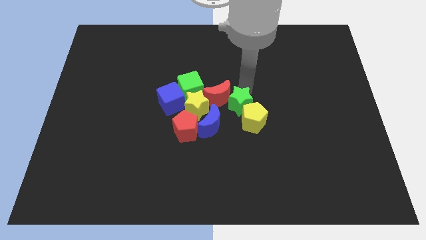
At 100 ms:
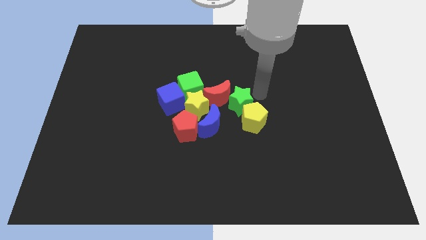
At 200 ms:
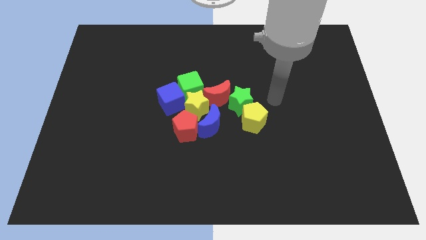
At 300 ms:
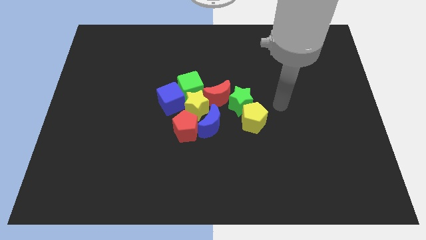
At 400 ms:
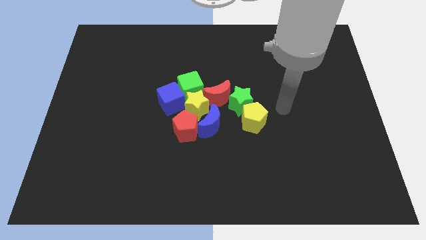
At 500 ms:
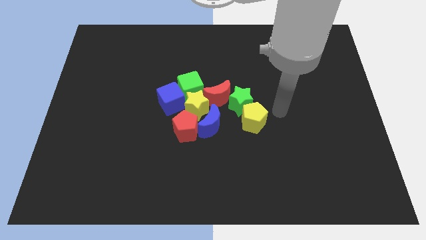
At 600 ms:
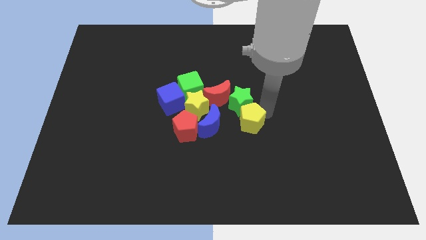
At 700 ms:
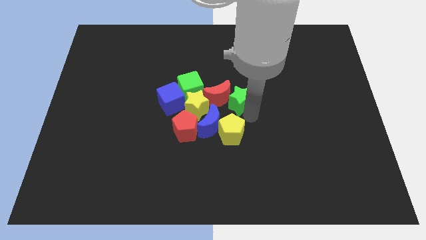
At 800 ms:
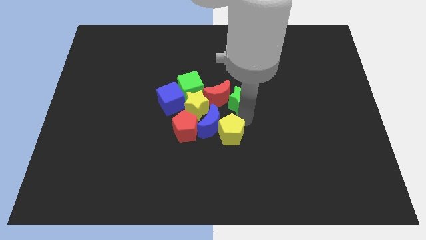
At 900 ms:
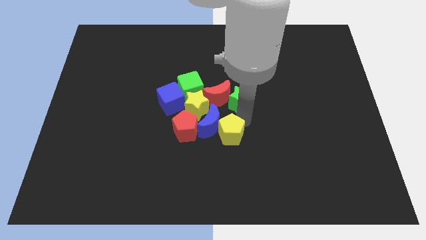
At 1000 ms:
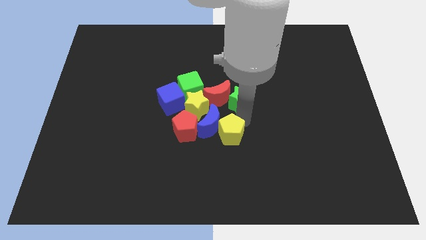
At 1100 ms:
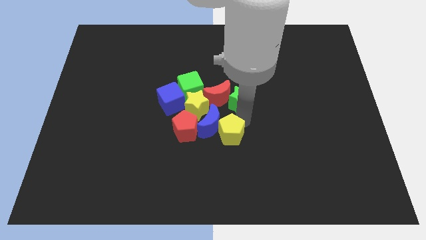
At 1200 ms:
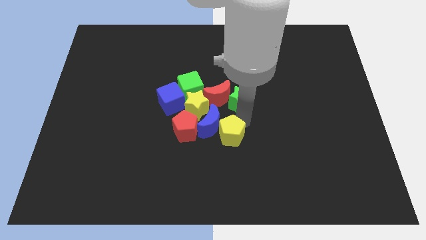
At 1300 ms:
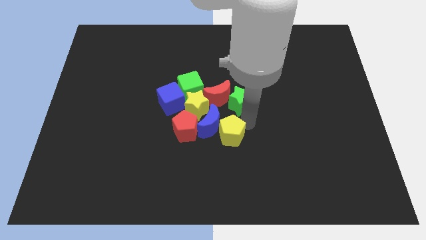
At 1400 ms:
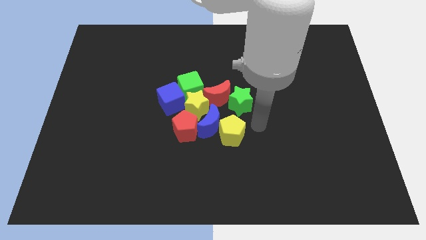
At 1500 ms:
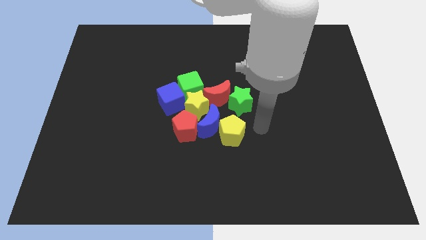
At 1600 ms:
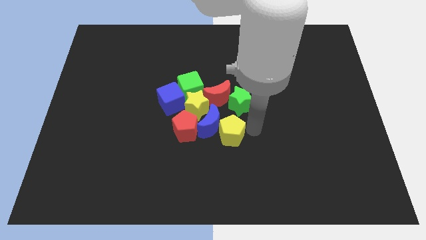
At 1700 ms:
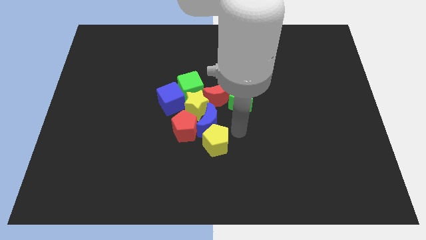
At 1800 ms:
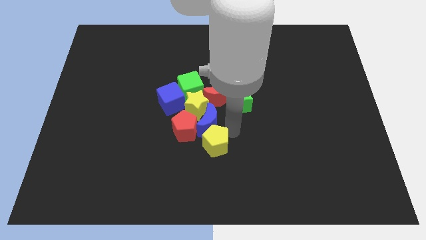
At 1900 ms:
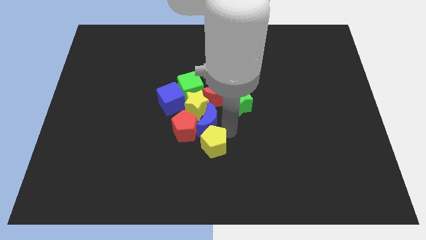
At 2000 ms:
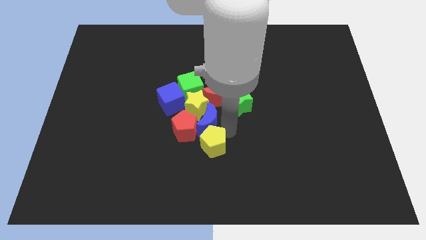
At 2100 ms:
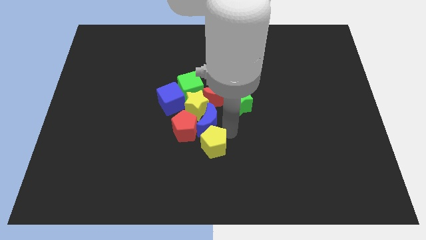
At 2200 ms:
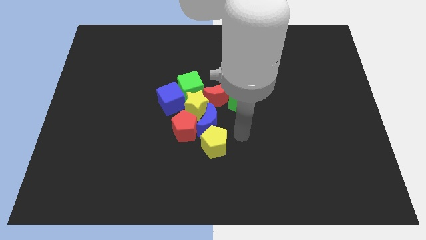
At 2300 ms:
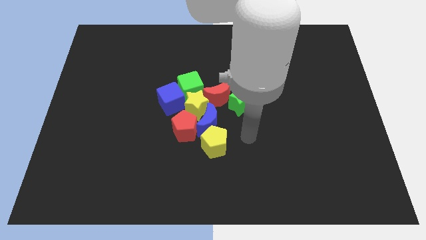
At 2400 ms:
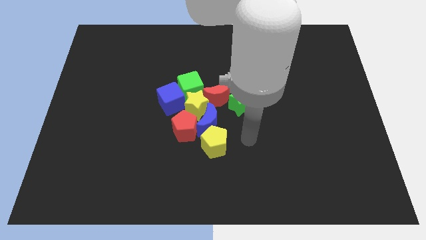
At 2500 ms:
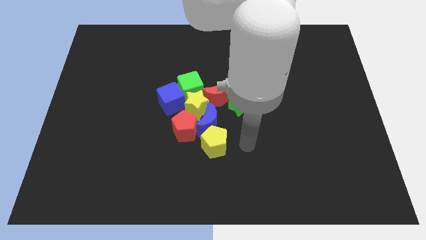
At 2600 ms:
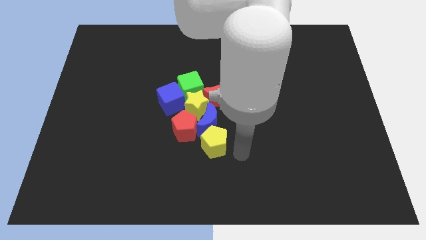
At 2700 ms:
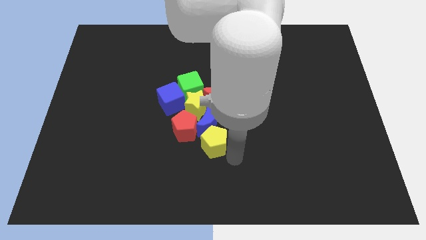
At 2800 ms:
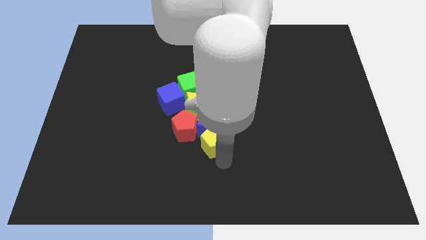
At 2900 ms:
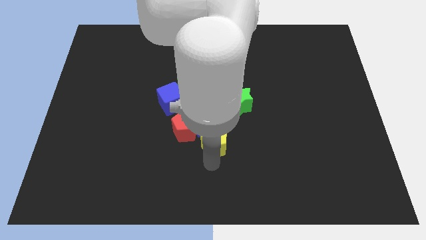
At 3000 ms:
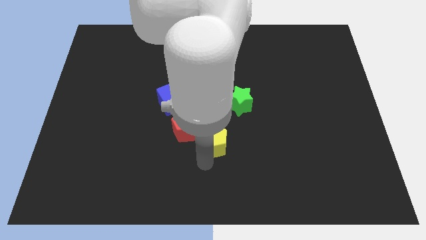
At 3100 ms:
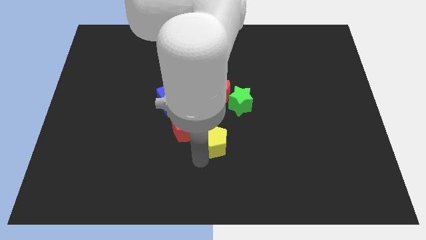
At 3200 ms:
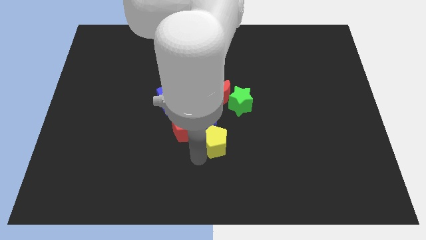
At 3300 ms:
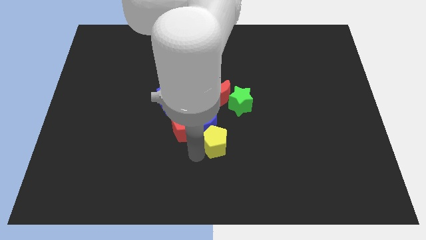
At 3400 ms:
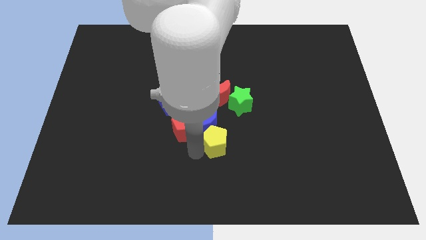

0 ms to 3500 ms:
place the yellow pentagon to the bottom side of the blue crescent

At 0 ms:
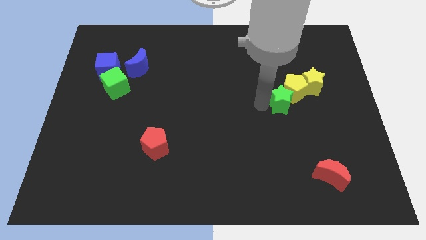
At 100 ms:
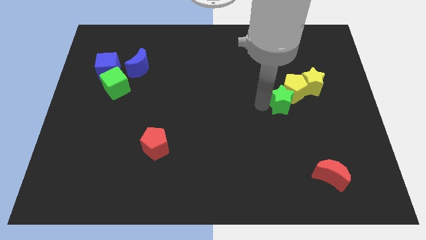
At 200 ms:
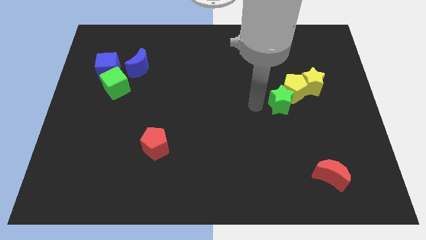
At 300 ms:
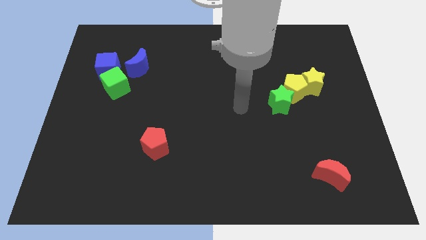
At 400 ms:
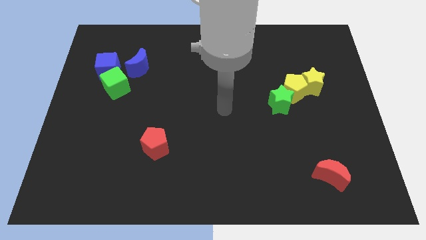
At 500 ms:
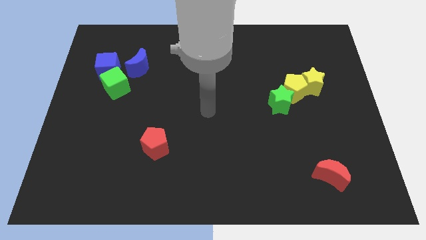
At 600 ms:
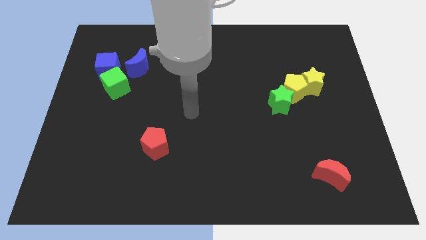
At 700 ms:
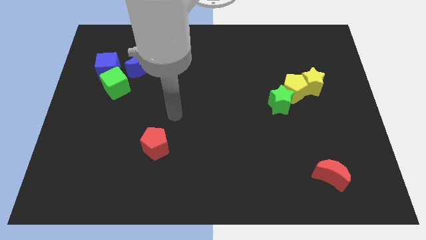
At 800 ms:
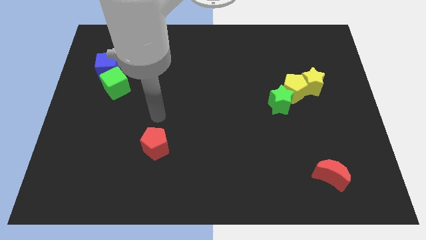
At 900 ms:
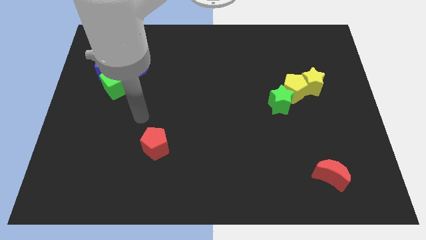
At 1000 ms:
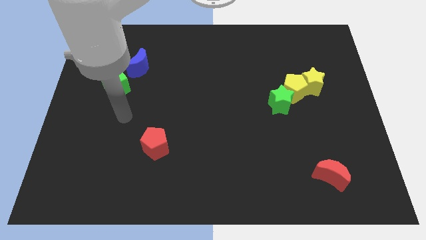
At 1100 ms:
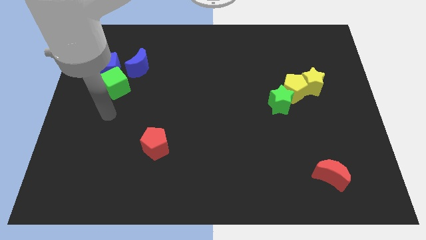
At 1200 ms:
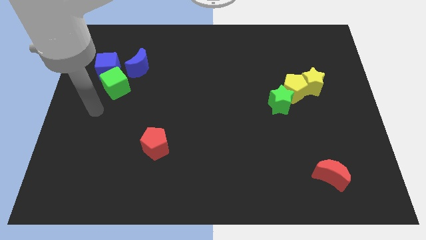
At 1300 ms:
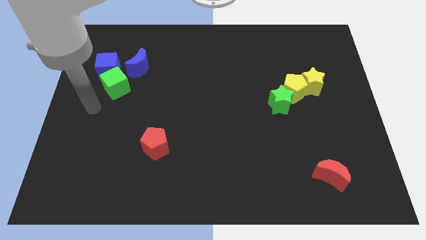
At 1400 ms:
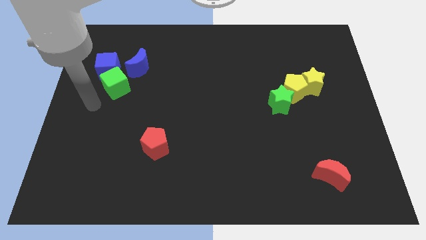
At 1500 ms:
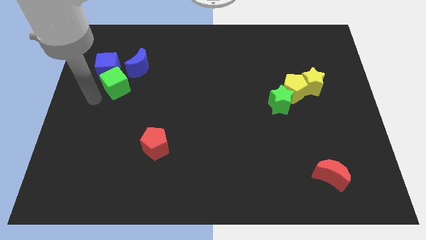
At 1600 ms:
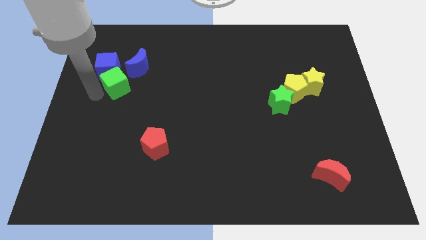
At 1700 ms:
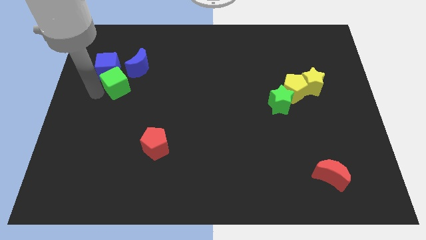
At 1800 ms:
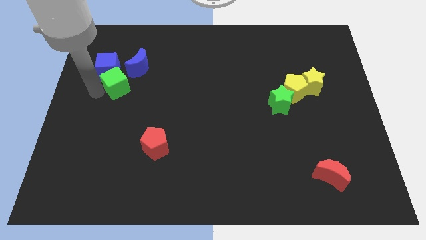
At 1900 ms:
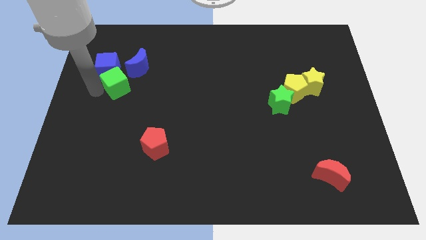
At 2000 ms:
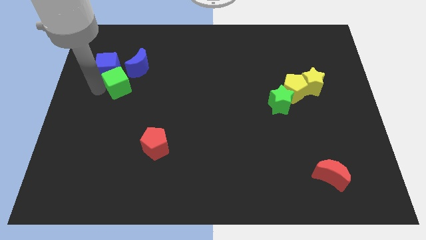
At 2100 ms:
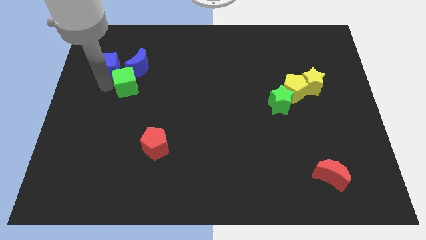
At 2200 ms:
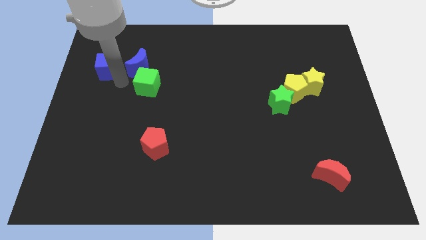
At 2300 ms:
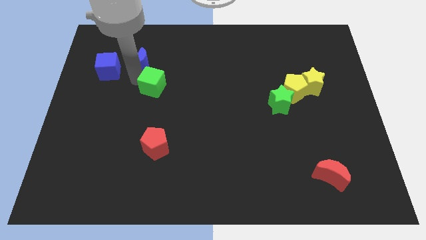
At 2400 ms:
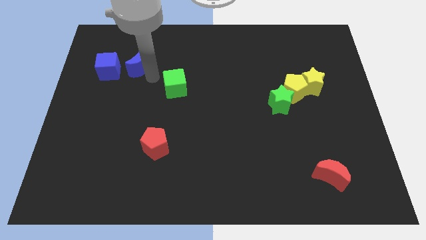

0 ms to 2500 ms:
move the green cube away from the blue cube

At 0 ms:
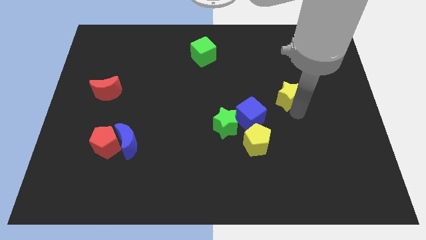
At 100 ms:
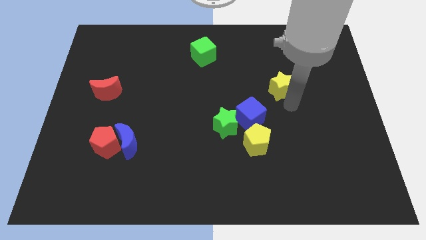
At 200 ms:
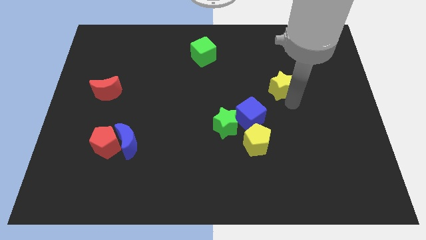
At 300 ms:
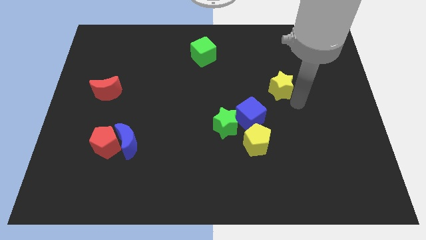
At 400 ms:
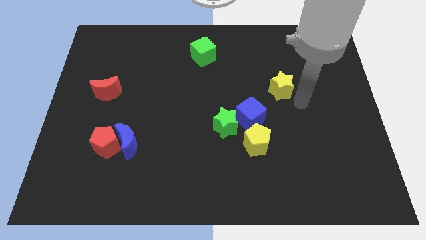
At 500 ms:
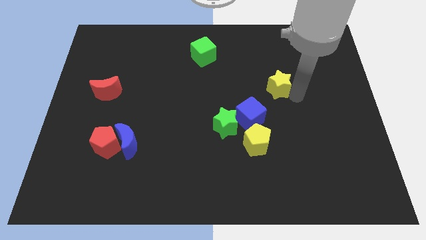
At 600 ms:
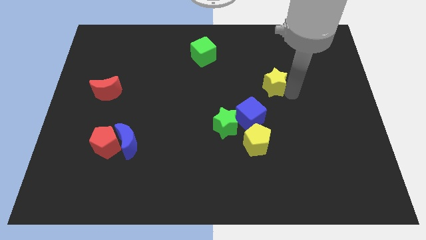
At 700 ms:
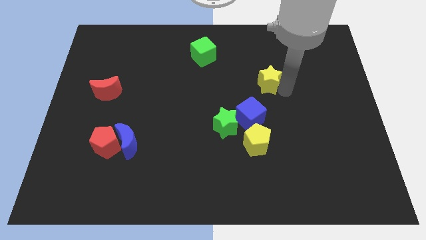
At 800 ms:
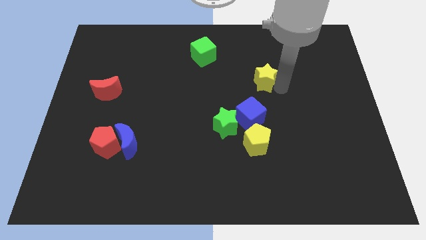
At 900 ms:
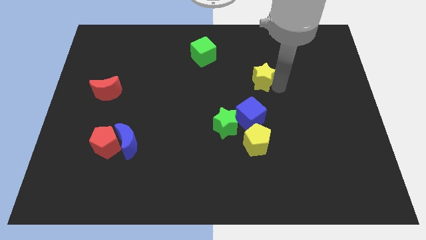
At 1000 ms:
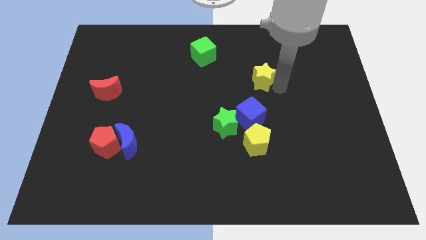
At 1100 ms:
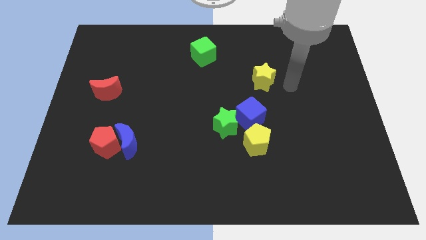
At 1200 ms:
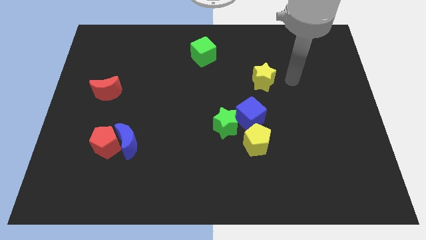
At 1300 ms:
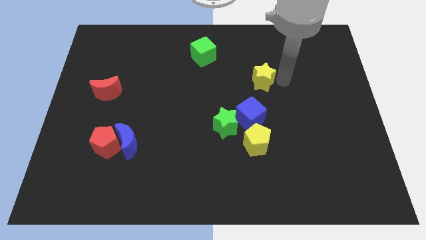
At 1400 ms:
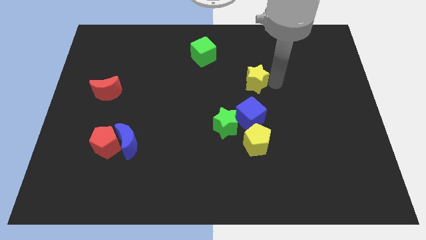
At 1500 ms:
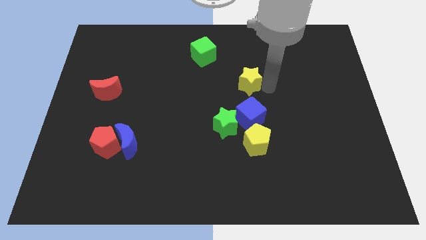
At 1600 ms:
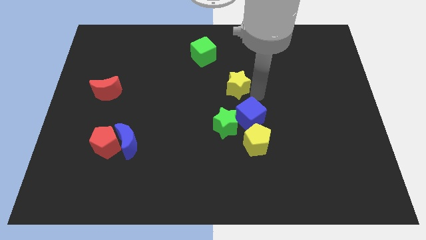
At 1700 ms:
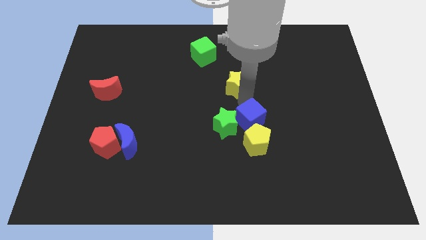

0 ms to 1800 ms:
move the yellow star to the left of the board

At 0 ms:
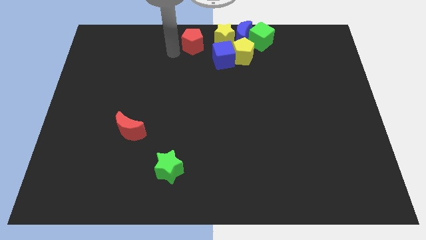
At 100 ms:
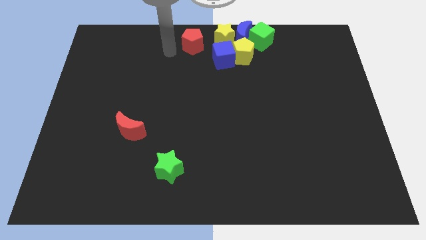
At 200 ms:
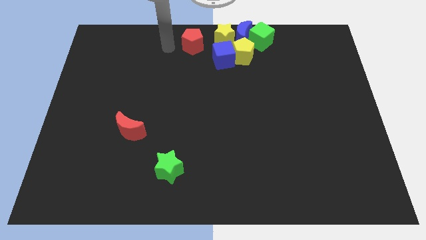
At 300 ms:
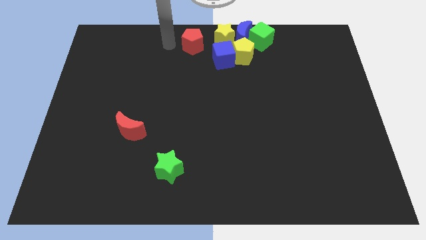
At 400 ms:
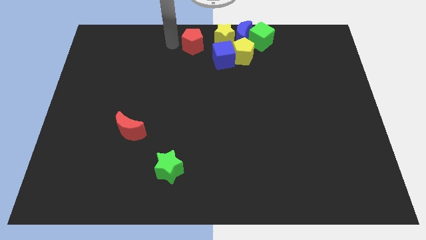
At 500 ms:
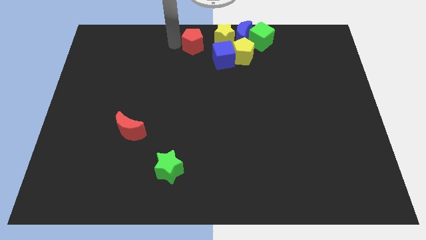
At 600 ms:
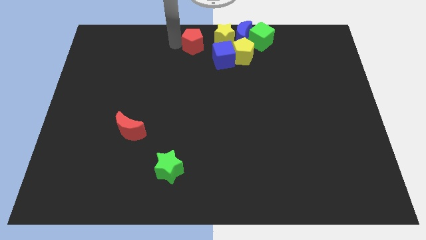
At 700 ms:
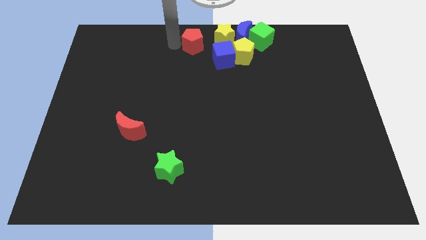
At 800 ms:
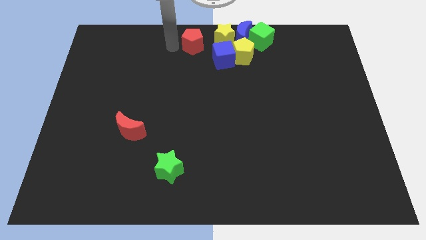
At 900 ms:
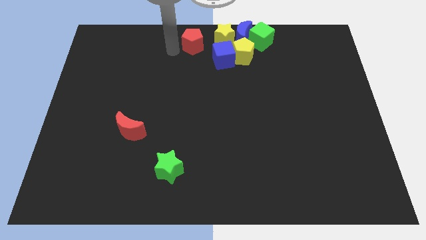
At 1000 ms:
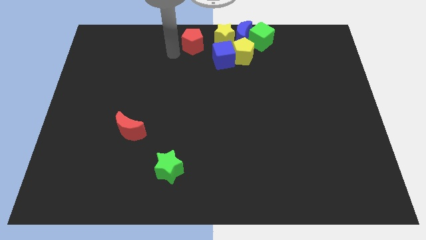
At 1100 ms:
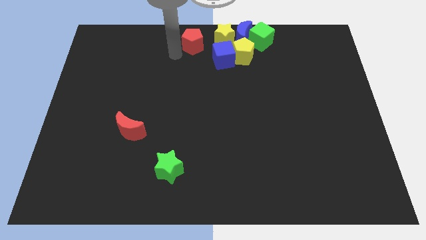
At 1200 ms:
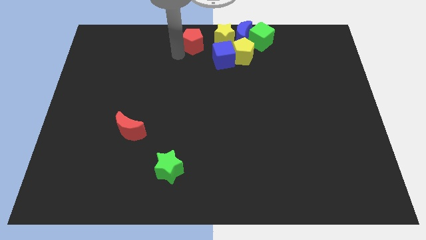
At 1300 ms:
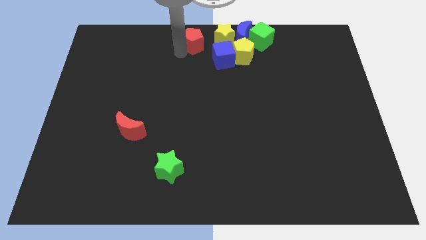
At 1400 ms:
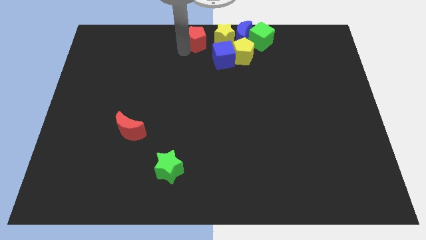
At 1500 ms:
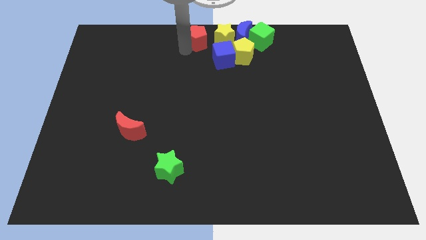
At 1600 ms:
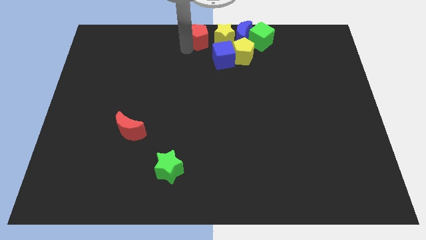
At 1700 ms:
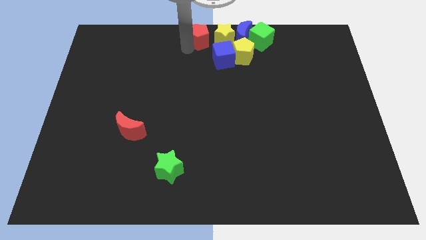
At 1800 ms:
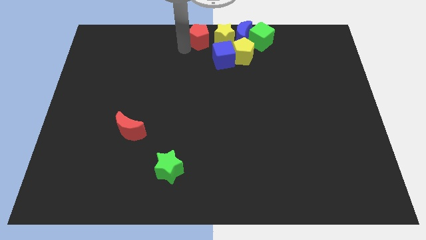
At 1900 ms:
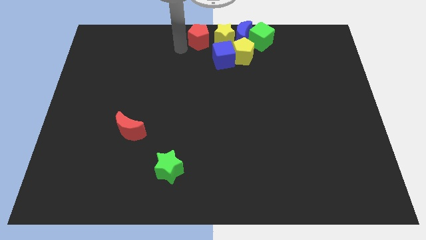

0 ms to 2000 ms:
move the red pentagon to the left of the yellow star
